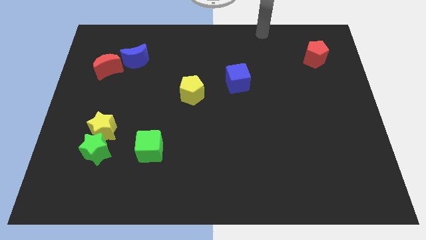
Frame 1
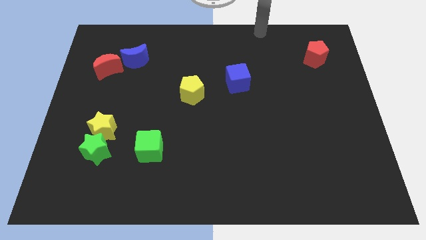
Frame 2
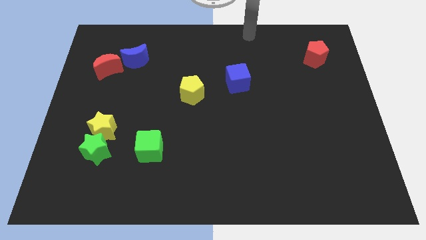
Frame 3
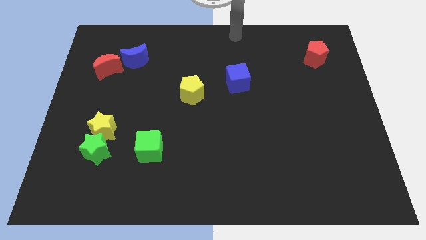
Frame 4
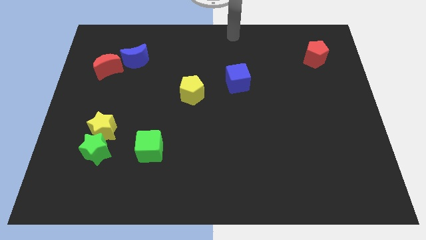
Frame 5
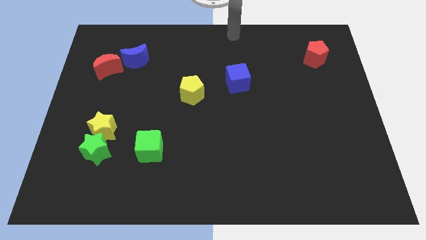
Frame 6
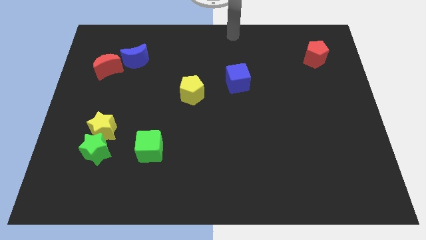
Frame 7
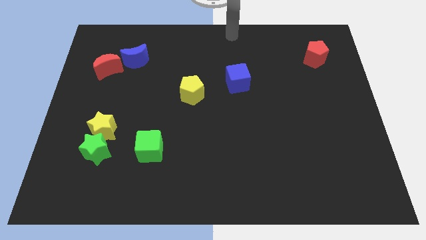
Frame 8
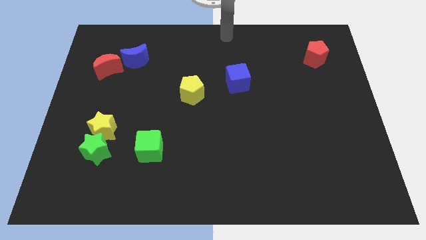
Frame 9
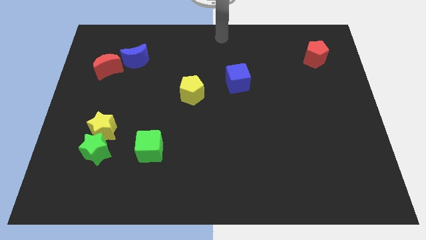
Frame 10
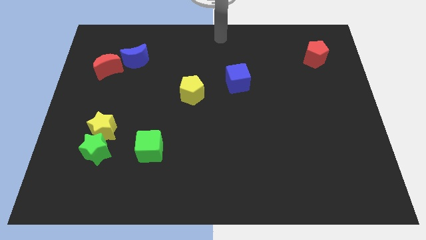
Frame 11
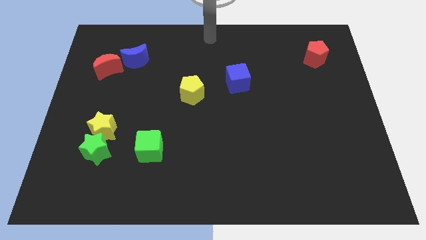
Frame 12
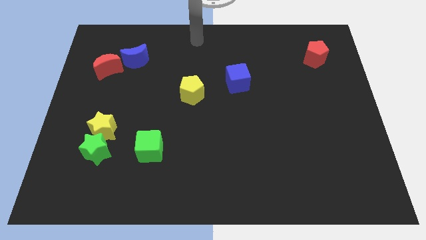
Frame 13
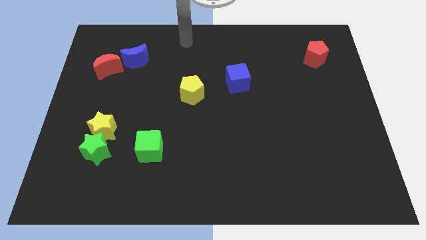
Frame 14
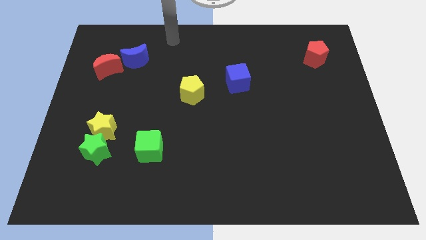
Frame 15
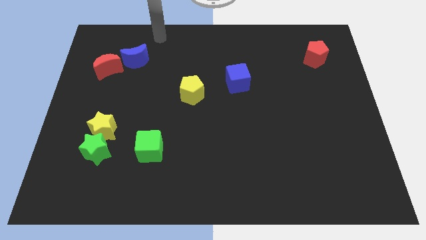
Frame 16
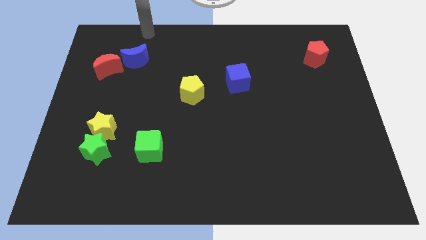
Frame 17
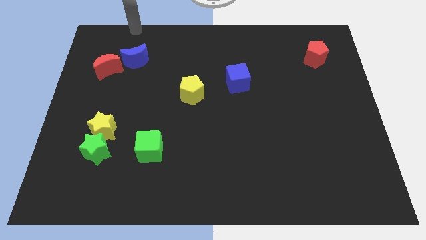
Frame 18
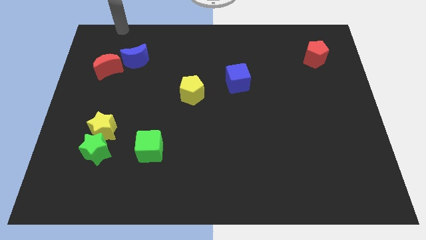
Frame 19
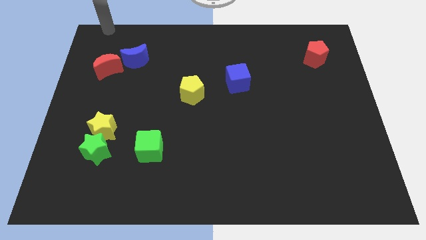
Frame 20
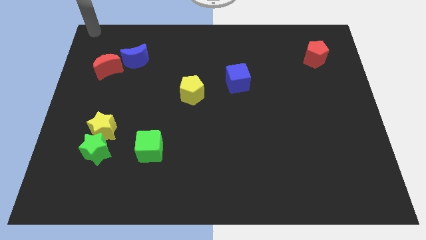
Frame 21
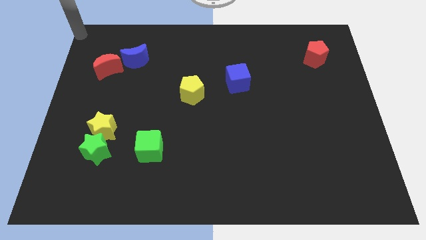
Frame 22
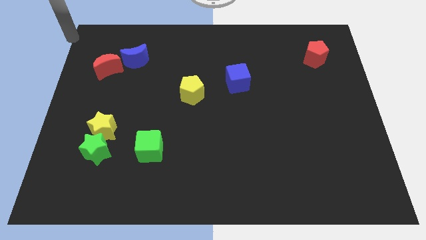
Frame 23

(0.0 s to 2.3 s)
go and point your arm at the top left corner of the board

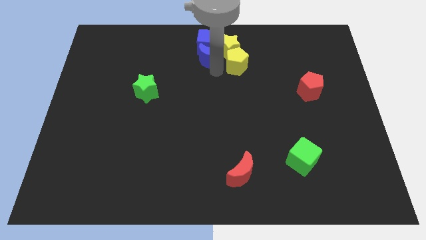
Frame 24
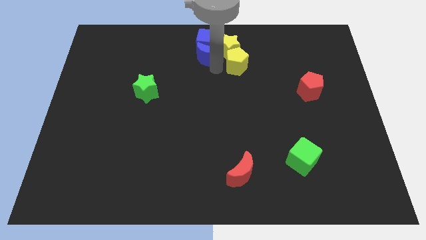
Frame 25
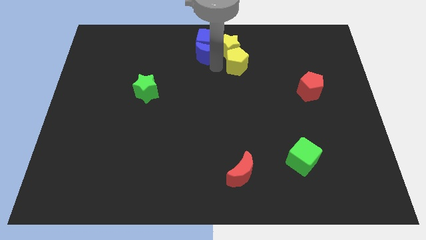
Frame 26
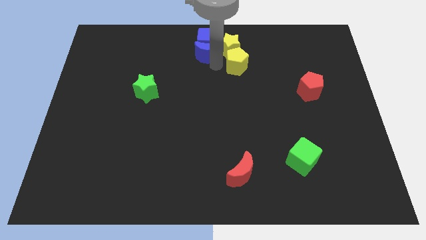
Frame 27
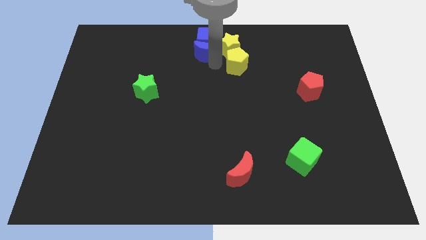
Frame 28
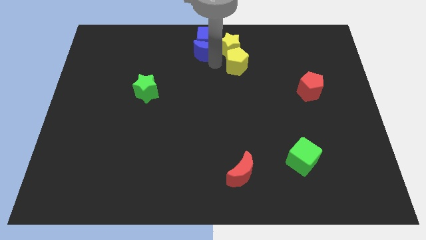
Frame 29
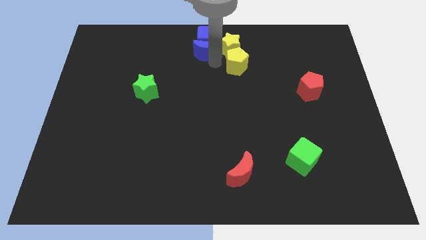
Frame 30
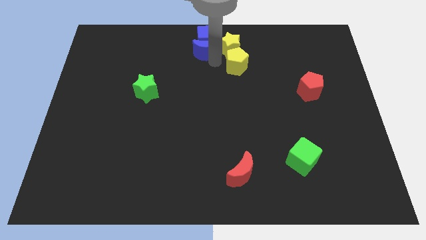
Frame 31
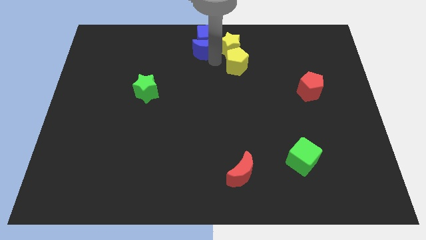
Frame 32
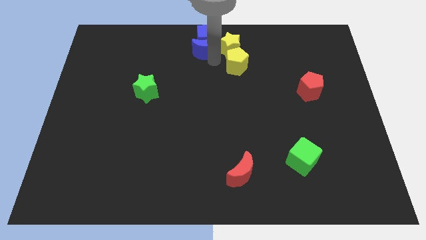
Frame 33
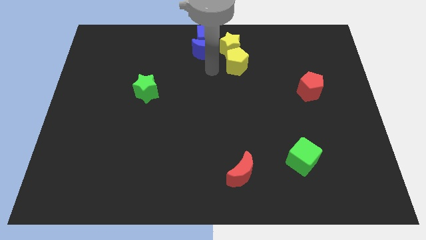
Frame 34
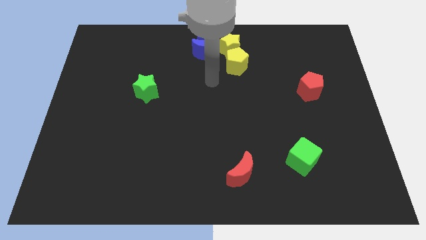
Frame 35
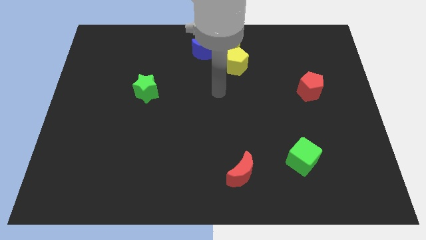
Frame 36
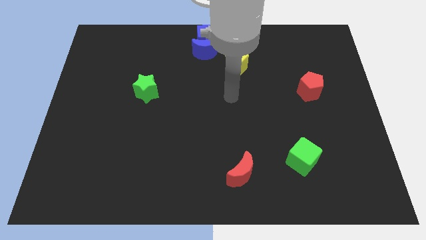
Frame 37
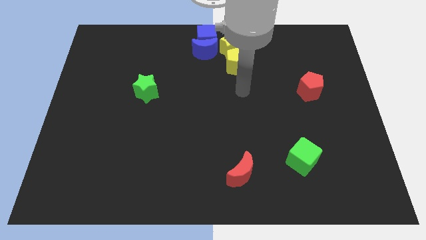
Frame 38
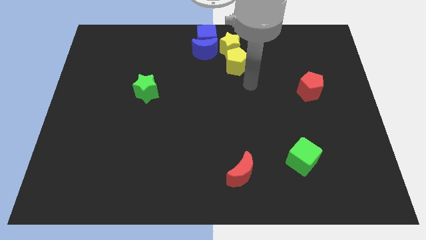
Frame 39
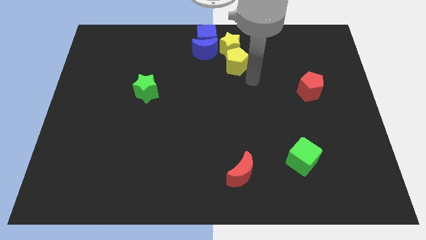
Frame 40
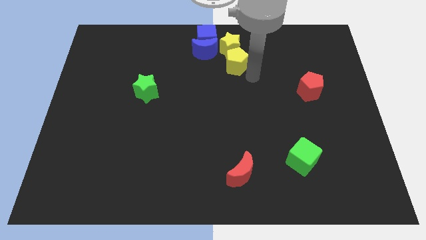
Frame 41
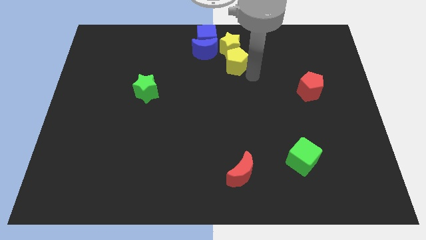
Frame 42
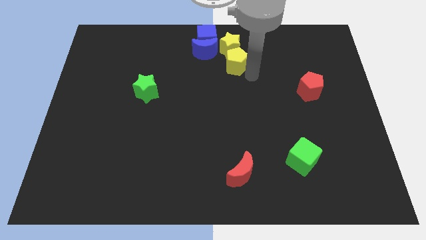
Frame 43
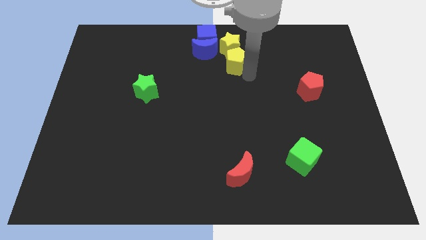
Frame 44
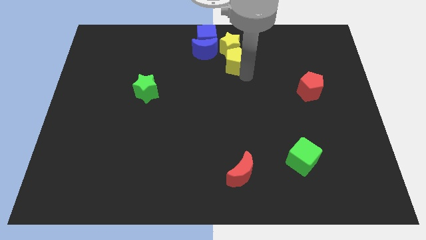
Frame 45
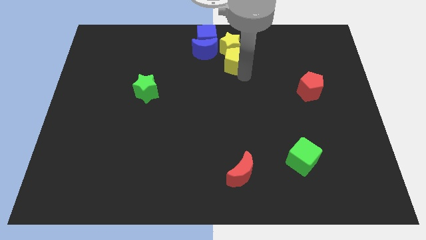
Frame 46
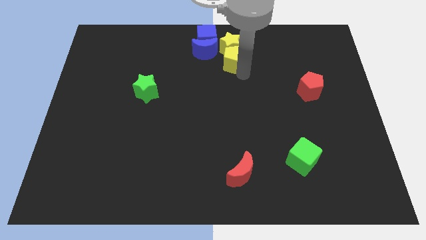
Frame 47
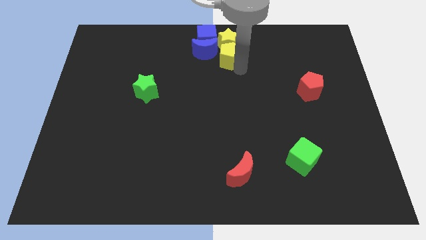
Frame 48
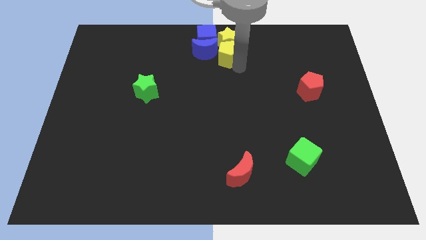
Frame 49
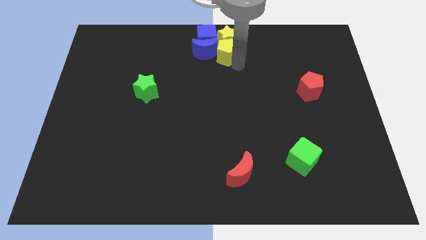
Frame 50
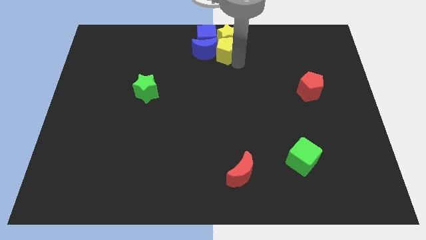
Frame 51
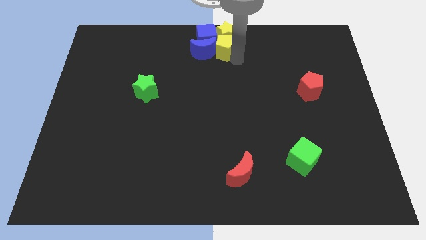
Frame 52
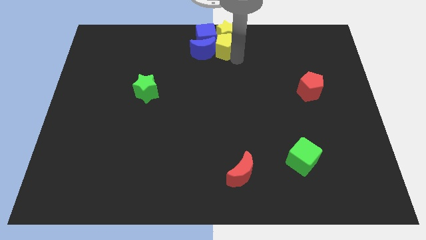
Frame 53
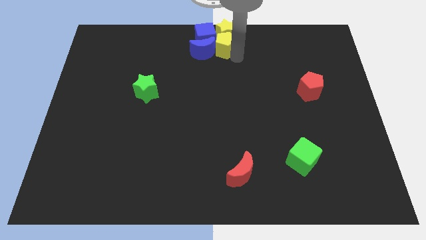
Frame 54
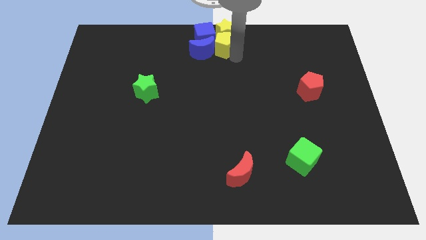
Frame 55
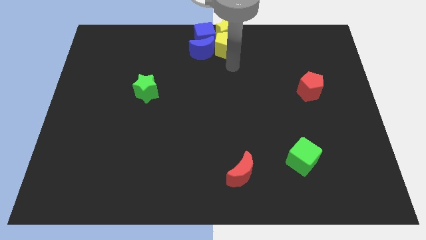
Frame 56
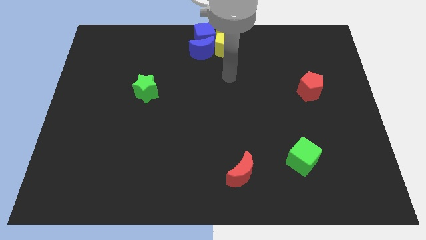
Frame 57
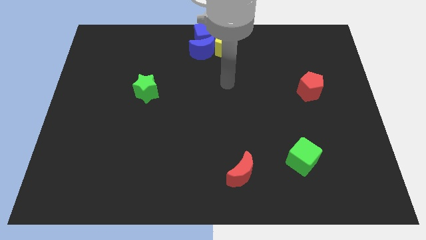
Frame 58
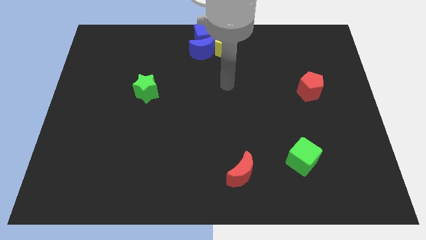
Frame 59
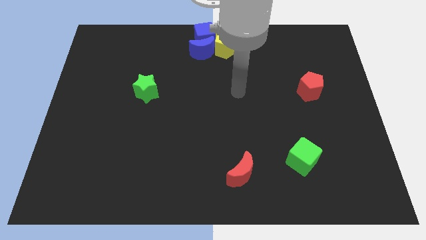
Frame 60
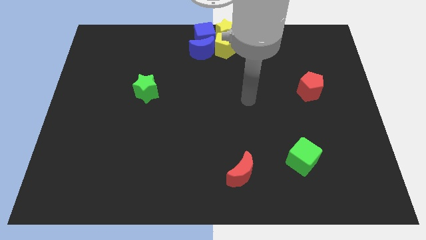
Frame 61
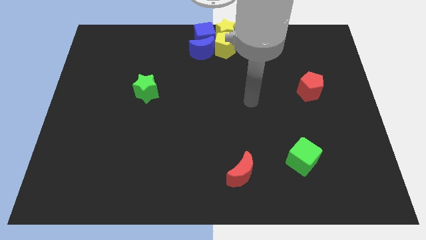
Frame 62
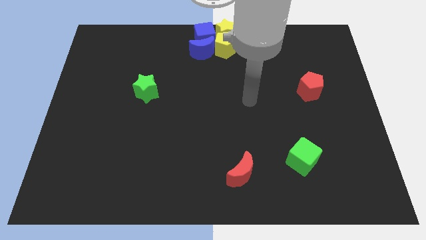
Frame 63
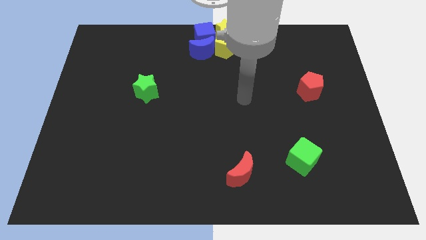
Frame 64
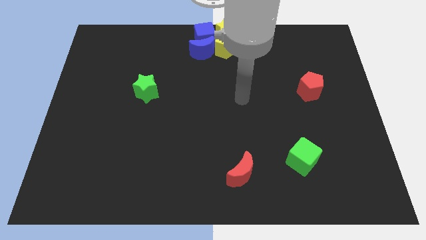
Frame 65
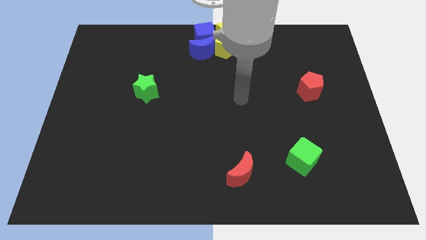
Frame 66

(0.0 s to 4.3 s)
move the yellow and the blue blocks to the top center of the board

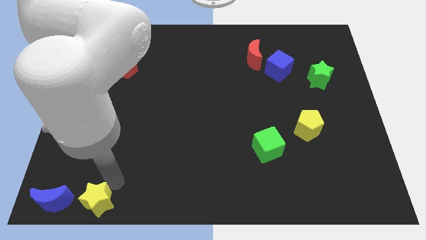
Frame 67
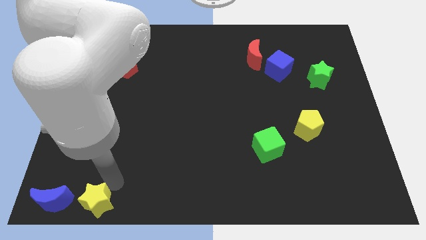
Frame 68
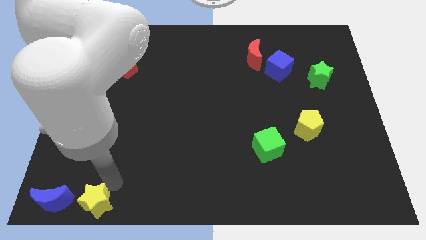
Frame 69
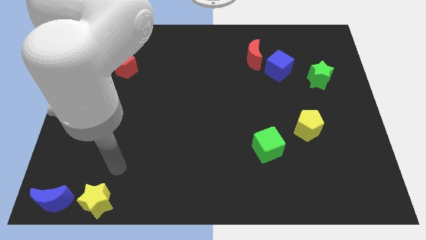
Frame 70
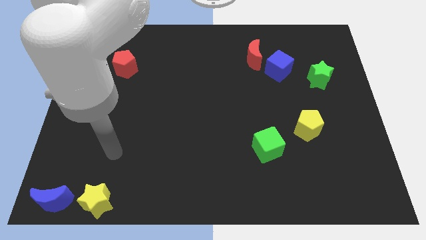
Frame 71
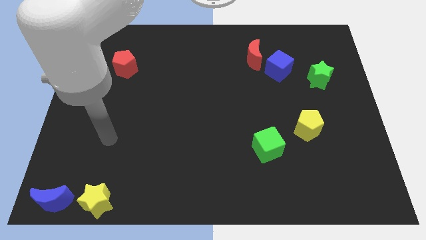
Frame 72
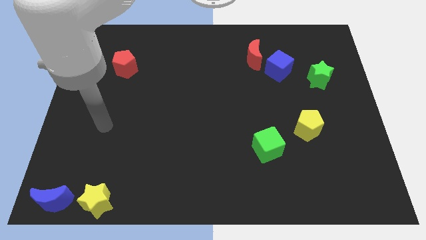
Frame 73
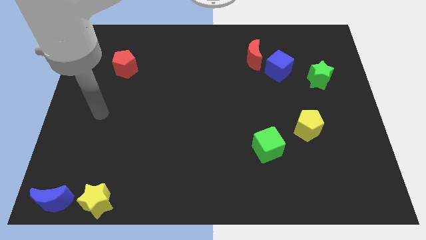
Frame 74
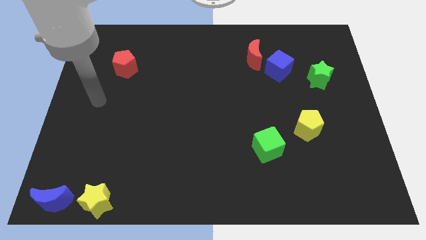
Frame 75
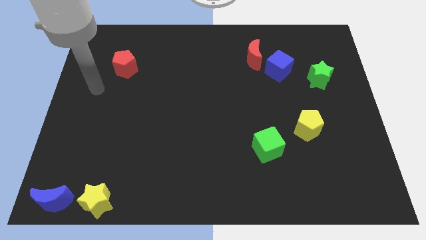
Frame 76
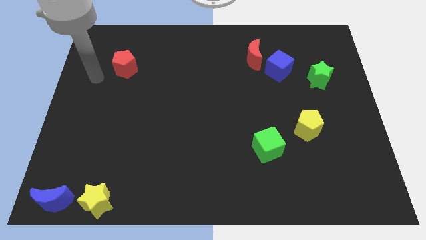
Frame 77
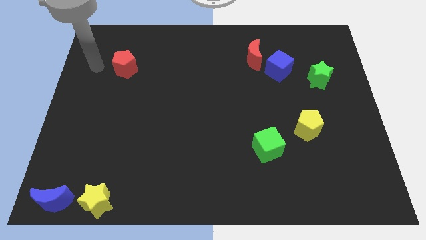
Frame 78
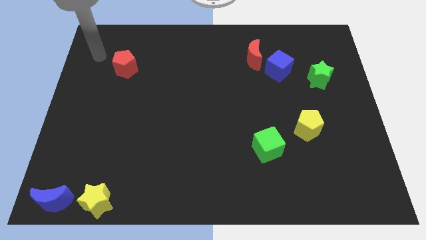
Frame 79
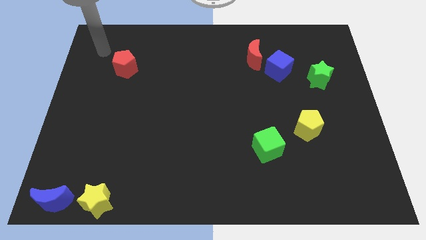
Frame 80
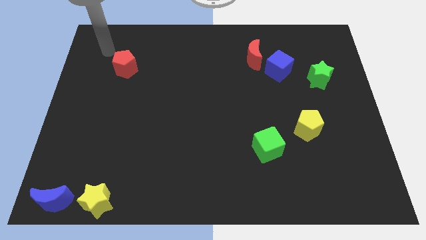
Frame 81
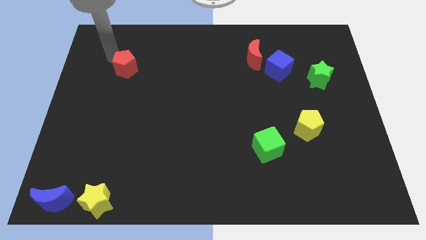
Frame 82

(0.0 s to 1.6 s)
move the arm upwards of the board

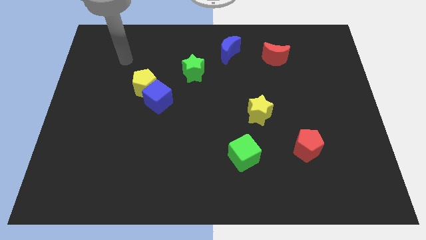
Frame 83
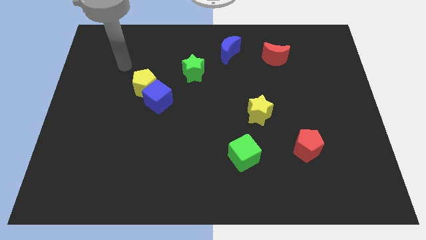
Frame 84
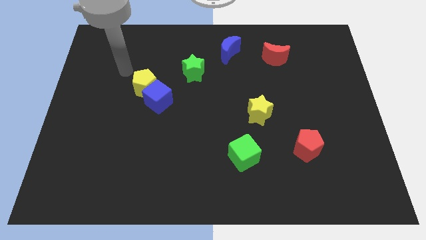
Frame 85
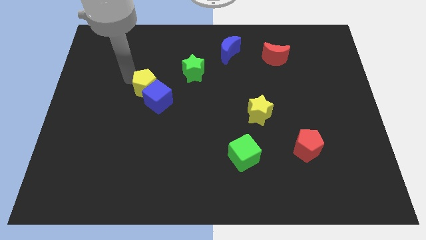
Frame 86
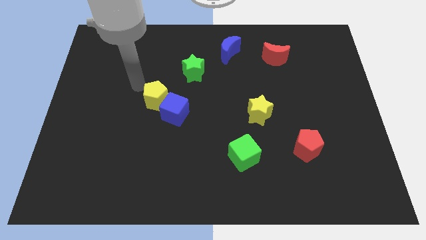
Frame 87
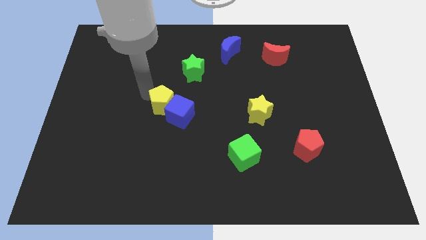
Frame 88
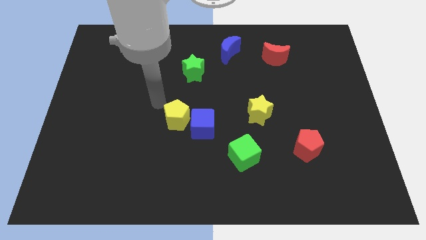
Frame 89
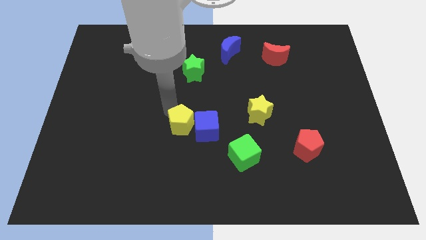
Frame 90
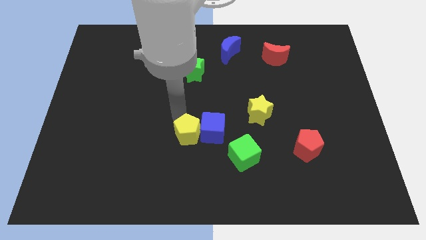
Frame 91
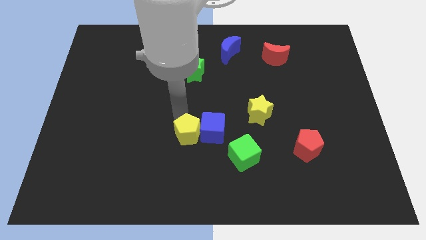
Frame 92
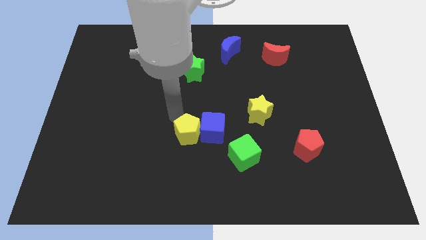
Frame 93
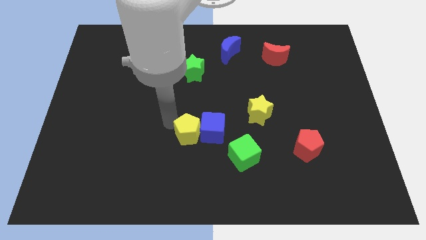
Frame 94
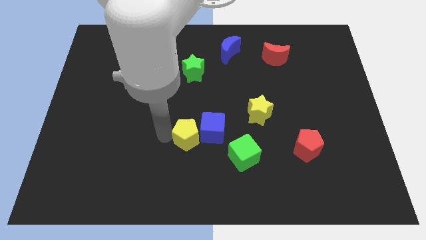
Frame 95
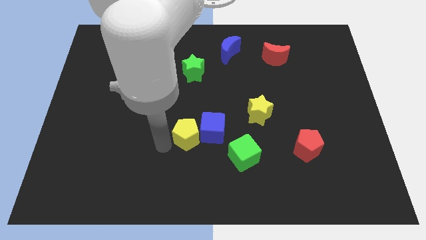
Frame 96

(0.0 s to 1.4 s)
place blue cube to the center of the board
